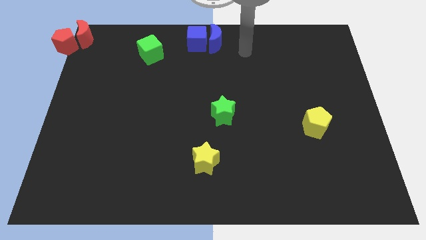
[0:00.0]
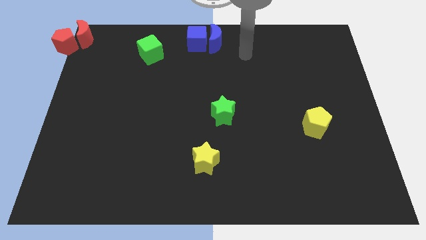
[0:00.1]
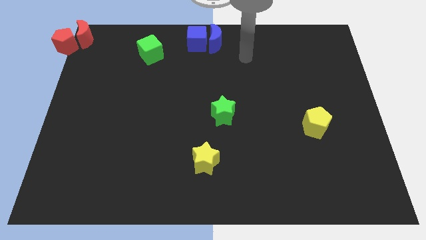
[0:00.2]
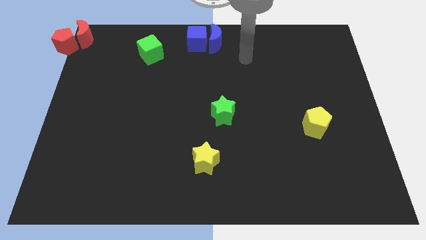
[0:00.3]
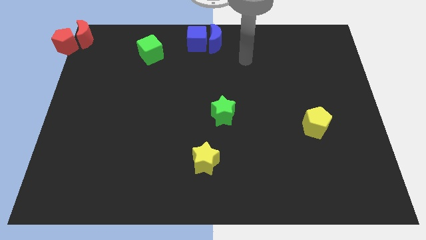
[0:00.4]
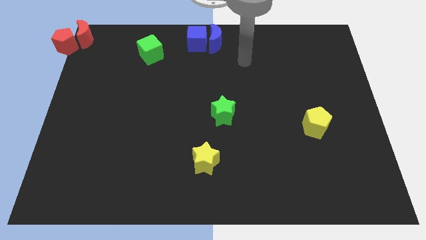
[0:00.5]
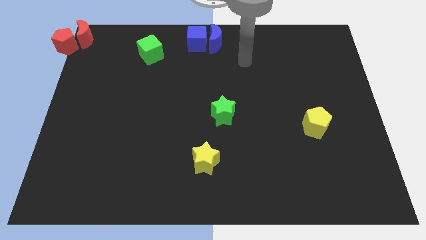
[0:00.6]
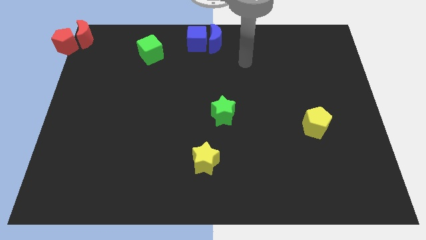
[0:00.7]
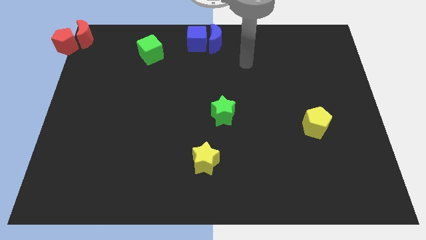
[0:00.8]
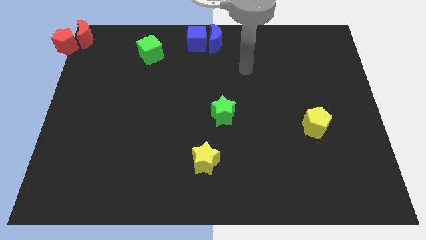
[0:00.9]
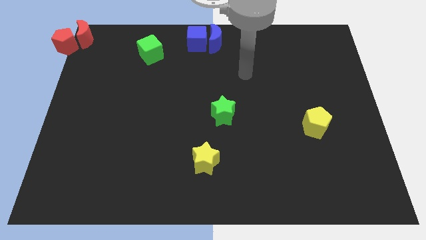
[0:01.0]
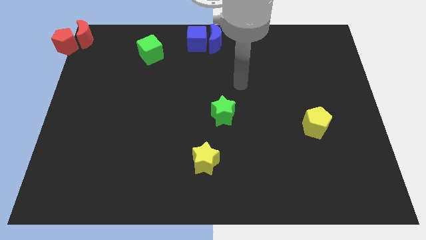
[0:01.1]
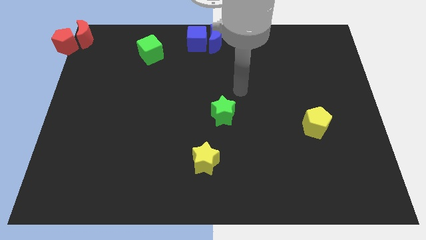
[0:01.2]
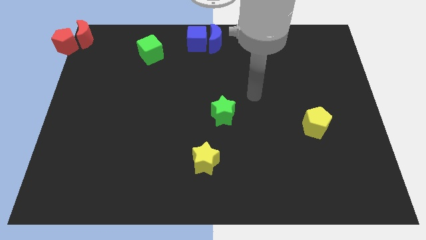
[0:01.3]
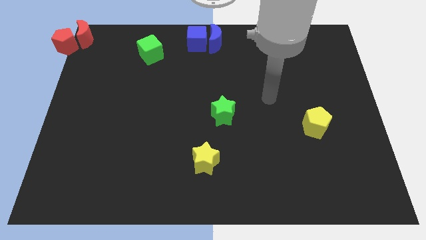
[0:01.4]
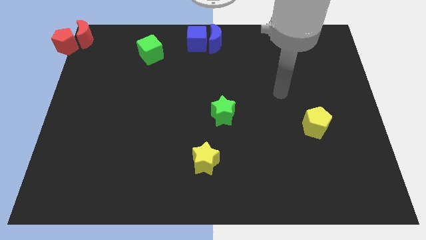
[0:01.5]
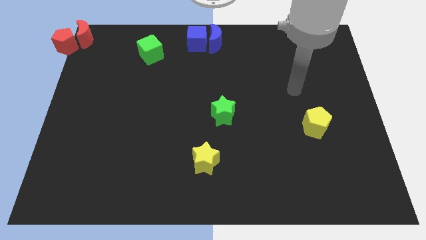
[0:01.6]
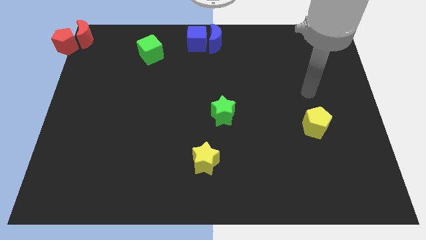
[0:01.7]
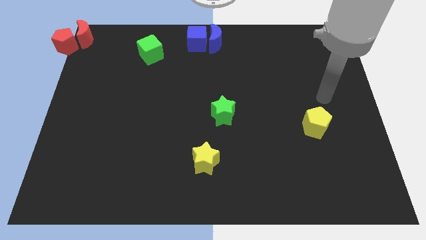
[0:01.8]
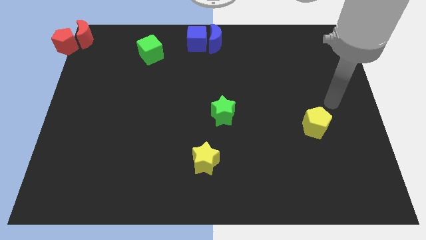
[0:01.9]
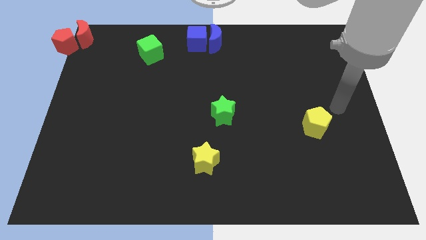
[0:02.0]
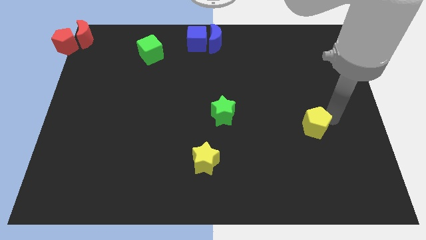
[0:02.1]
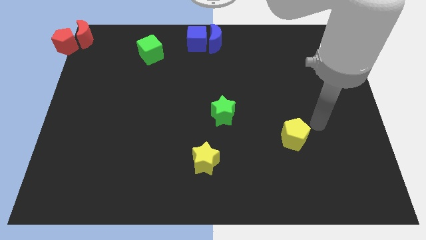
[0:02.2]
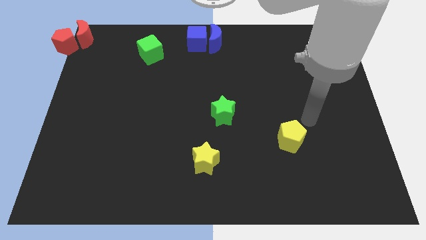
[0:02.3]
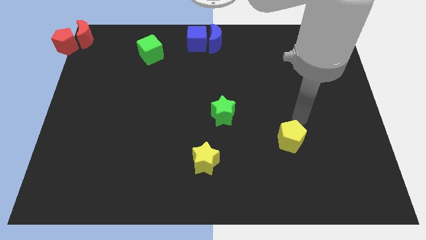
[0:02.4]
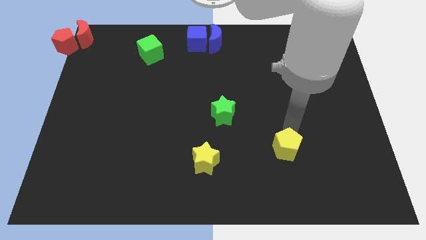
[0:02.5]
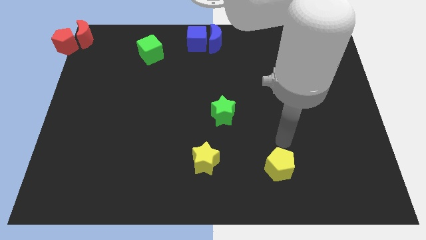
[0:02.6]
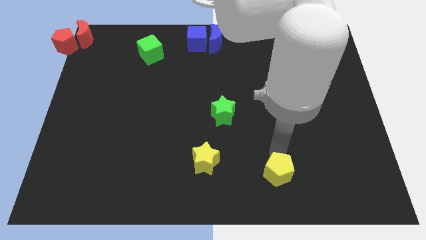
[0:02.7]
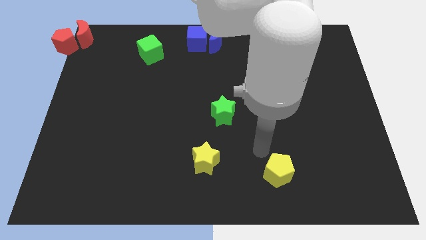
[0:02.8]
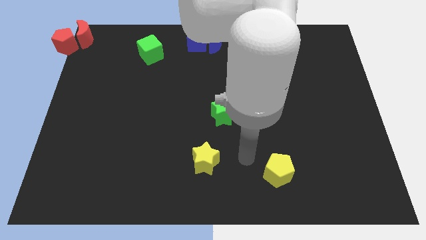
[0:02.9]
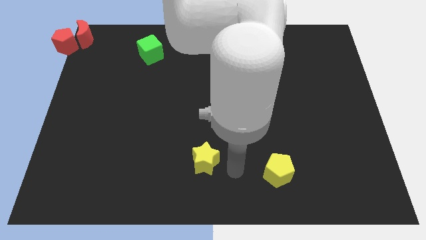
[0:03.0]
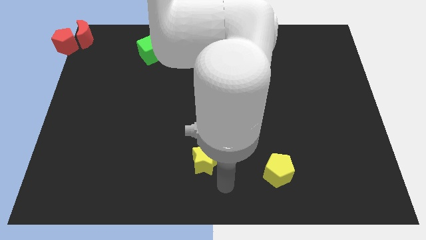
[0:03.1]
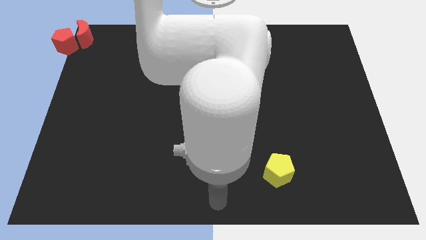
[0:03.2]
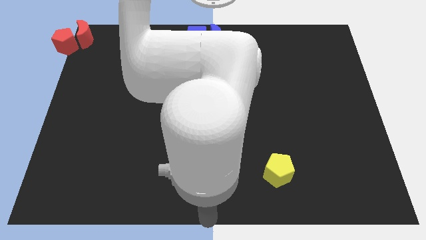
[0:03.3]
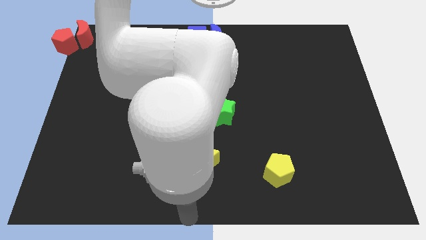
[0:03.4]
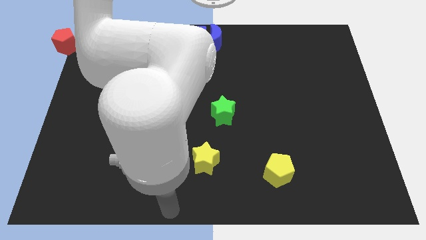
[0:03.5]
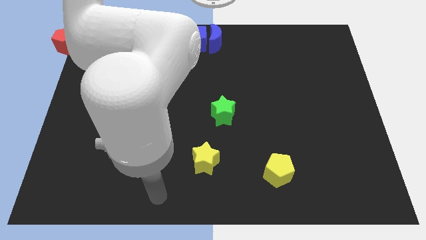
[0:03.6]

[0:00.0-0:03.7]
move the yellow pentagon to the bottom right side of the green star

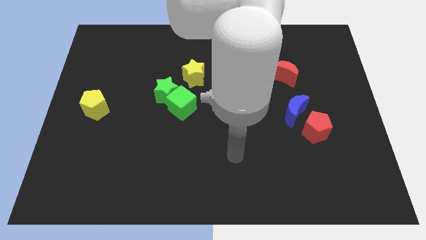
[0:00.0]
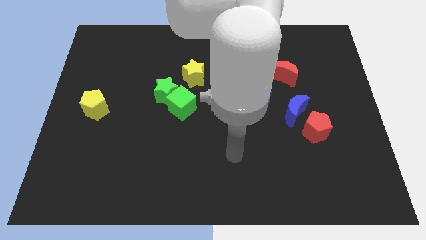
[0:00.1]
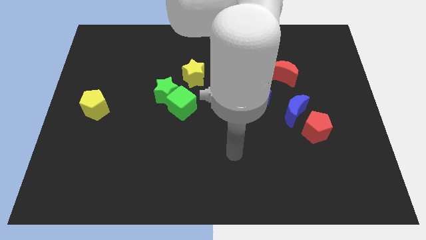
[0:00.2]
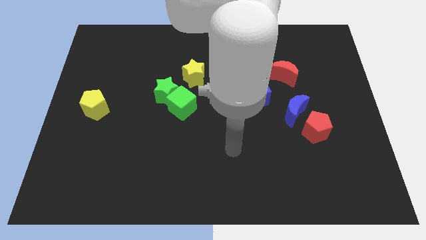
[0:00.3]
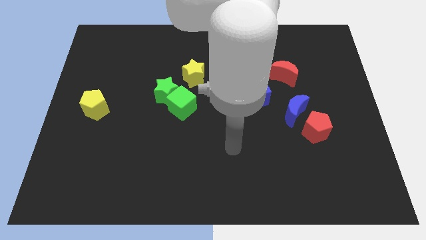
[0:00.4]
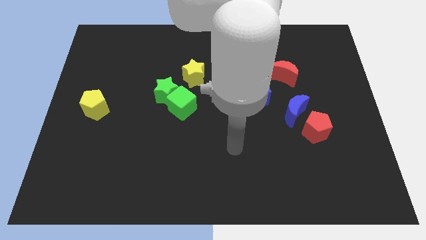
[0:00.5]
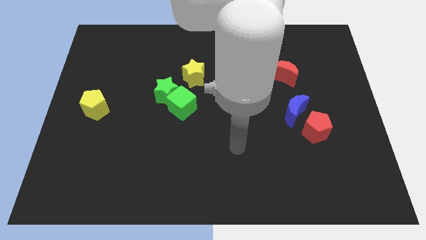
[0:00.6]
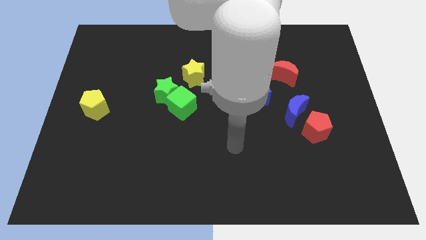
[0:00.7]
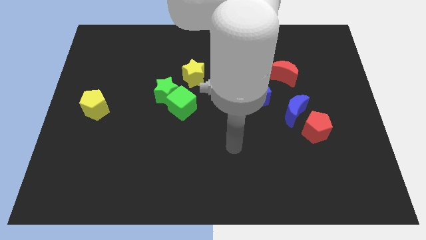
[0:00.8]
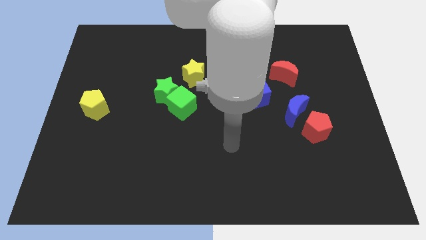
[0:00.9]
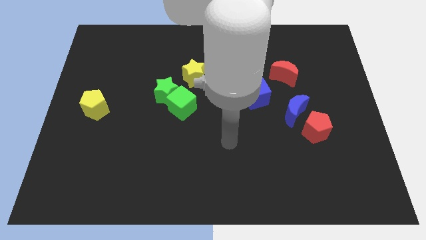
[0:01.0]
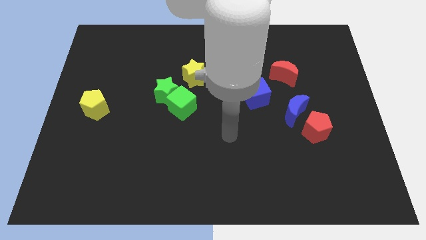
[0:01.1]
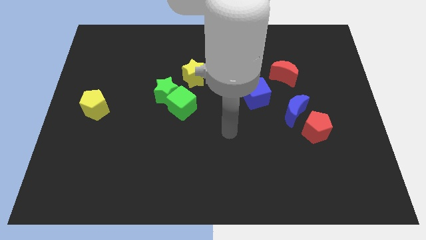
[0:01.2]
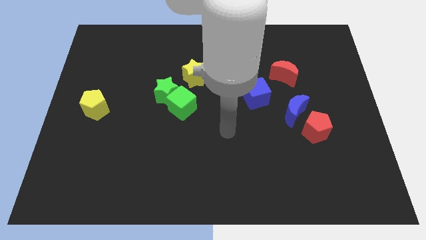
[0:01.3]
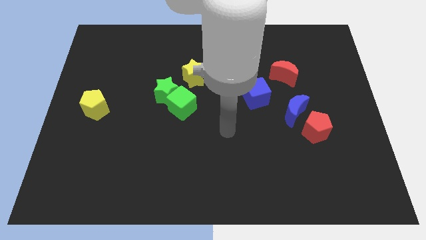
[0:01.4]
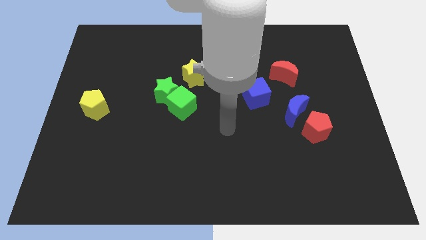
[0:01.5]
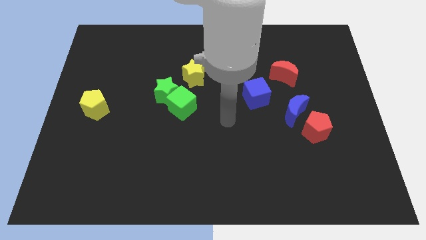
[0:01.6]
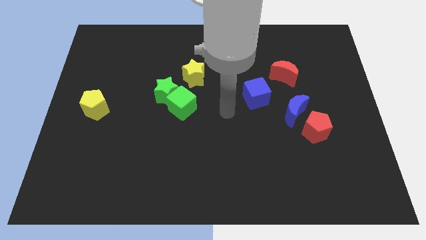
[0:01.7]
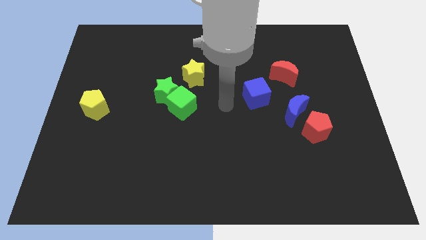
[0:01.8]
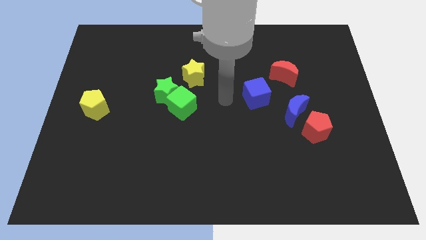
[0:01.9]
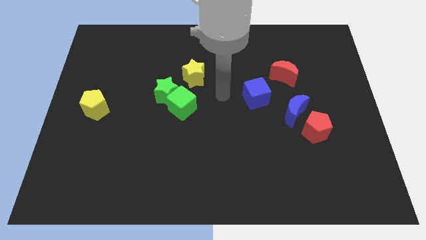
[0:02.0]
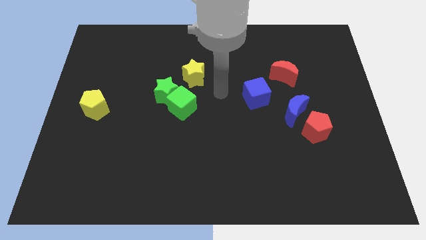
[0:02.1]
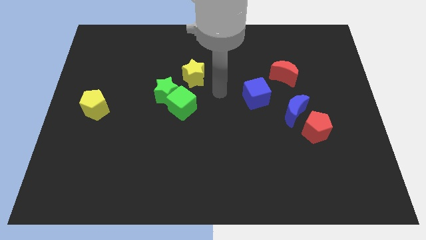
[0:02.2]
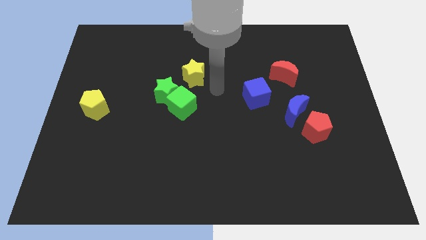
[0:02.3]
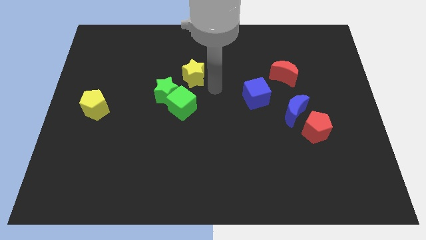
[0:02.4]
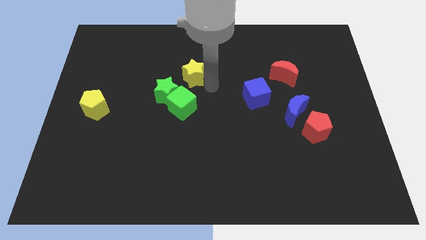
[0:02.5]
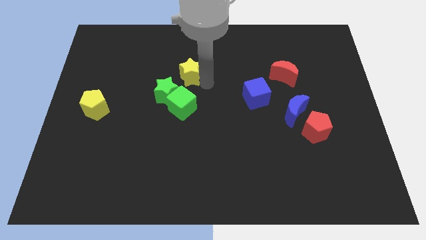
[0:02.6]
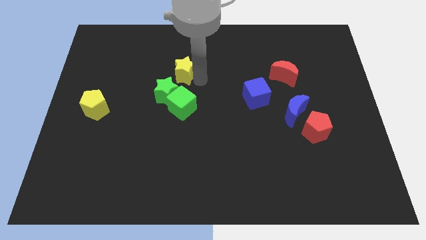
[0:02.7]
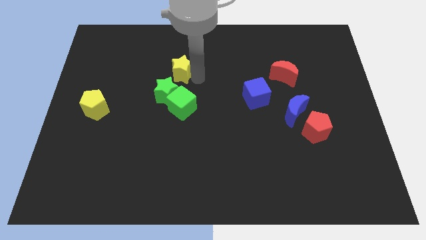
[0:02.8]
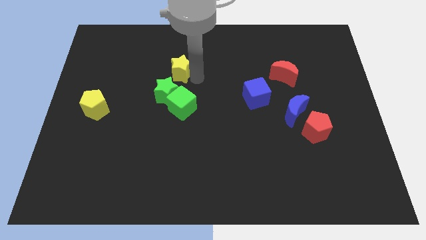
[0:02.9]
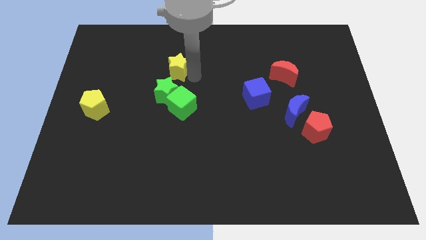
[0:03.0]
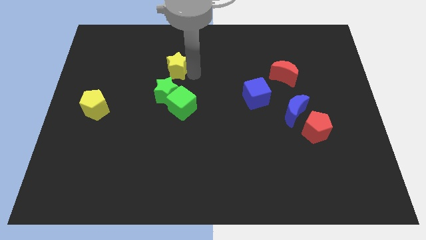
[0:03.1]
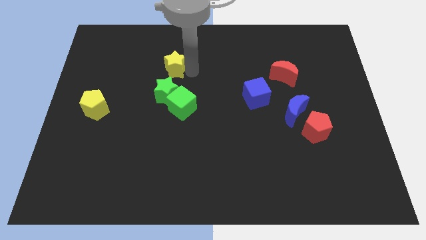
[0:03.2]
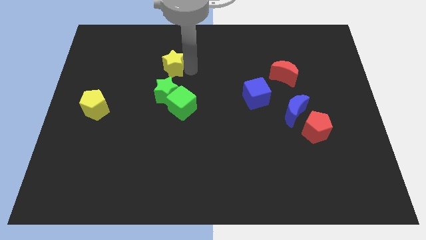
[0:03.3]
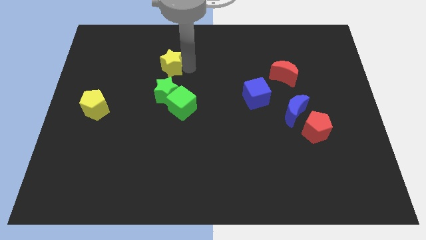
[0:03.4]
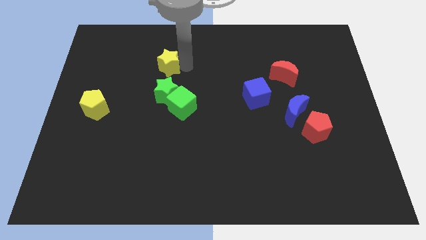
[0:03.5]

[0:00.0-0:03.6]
move the yellow star at the top of green star

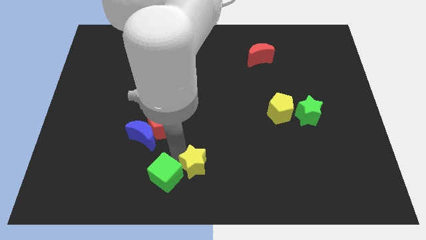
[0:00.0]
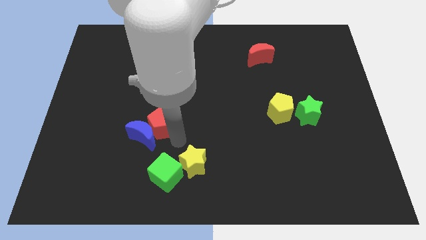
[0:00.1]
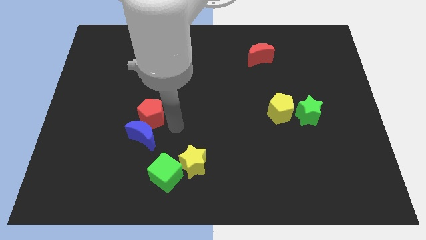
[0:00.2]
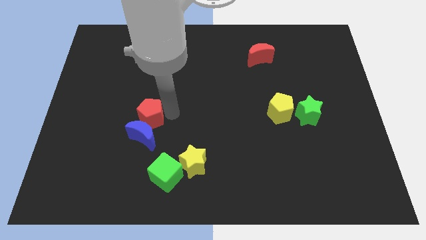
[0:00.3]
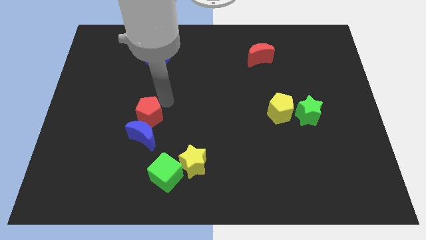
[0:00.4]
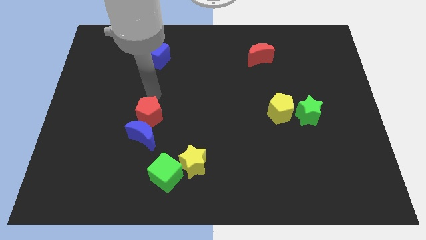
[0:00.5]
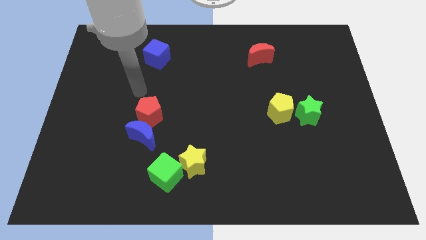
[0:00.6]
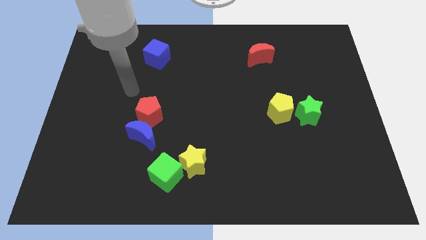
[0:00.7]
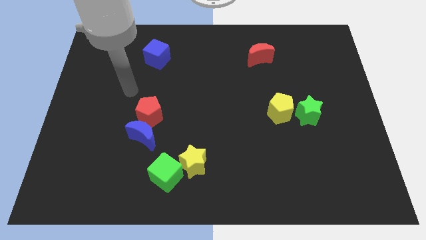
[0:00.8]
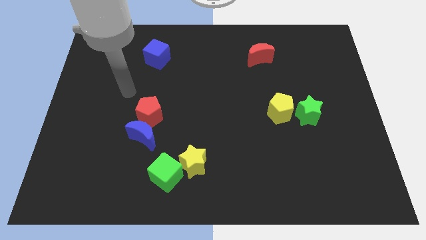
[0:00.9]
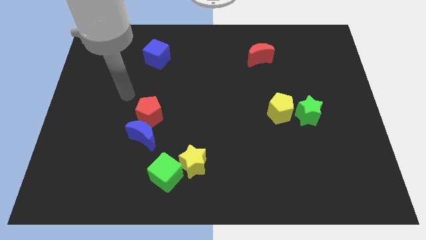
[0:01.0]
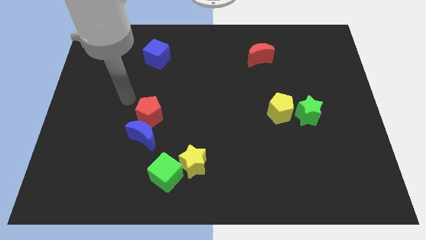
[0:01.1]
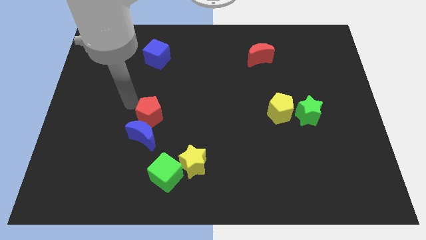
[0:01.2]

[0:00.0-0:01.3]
point your arm at the top left of the red pentagon

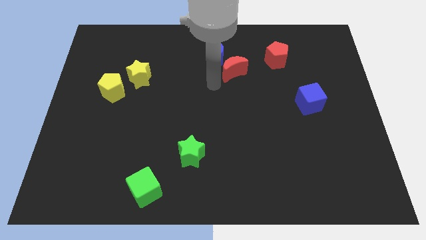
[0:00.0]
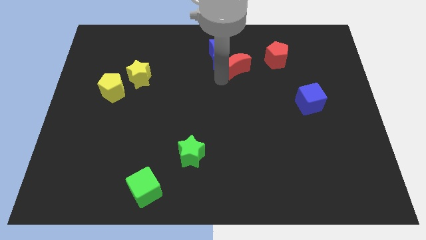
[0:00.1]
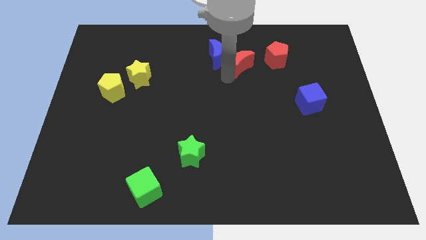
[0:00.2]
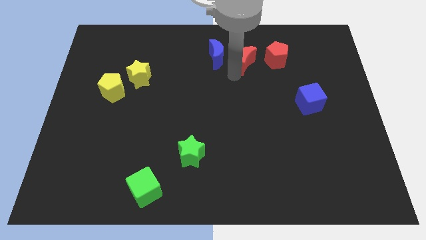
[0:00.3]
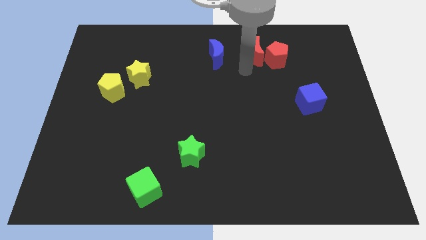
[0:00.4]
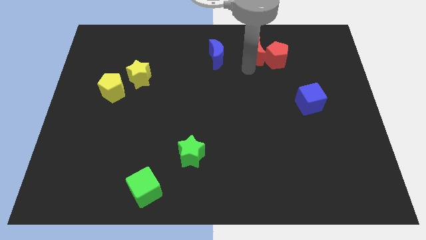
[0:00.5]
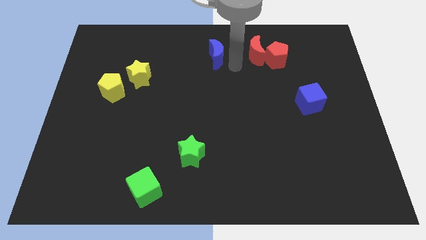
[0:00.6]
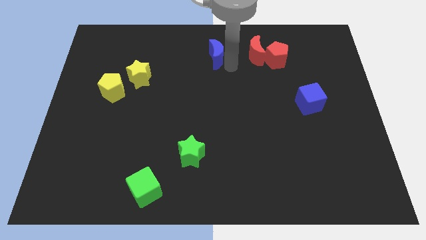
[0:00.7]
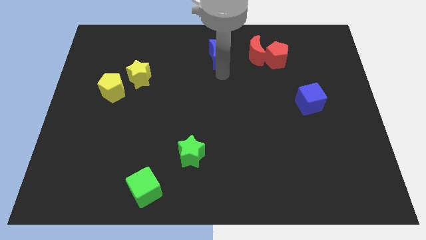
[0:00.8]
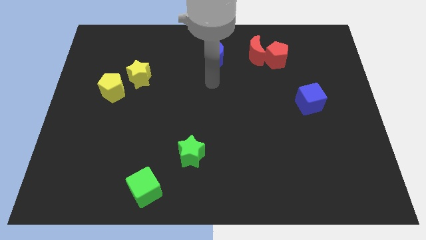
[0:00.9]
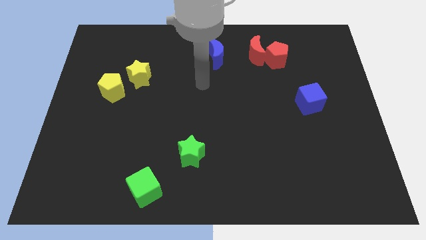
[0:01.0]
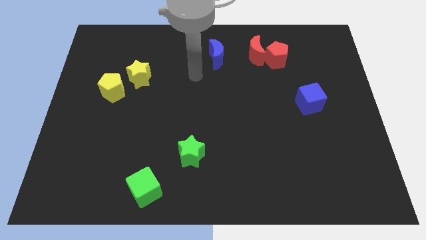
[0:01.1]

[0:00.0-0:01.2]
push the red crescent into the red pentagon
